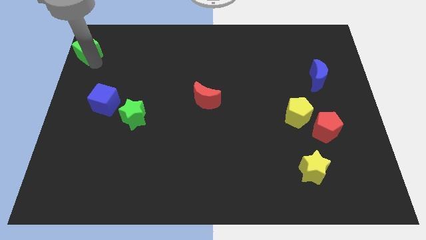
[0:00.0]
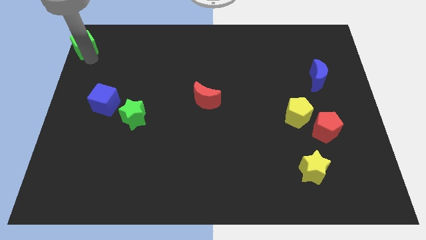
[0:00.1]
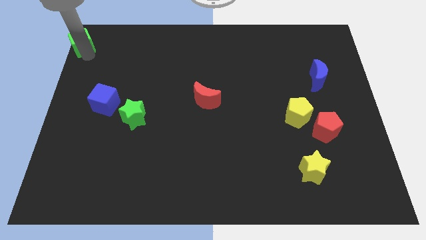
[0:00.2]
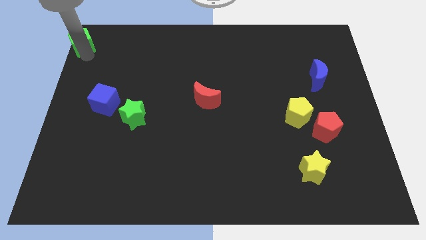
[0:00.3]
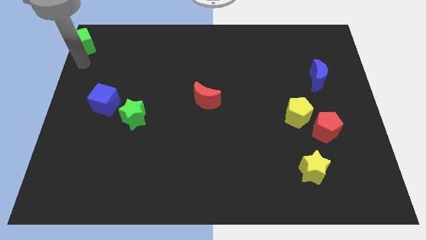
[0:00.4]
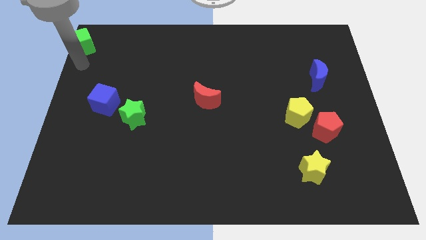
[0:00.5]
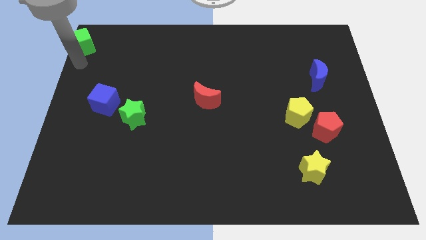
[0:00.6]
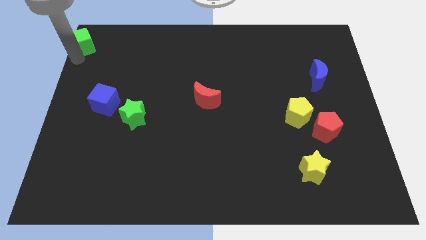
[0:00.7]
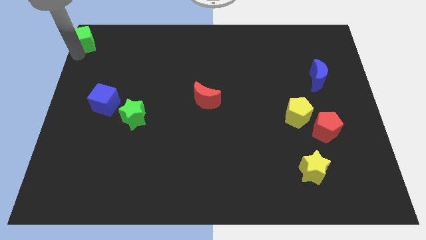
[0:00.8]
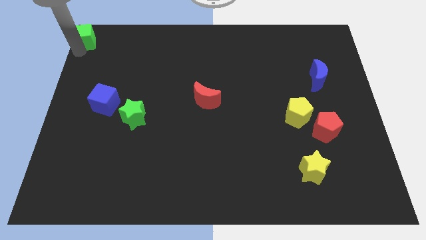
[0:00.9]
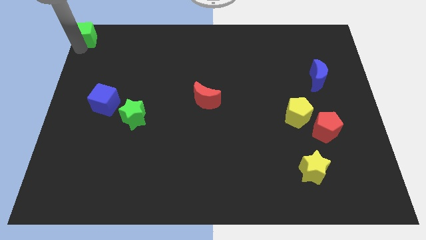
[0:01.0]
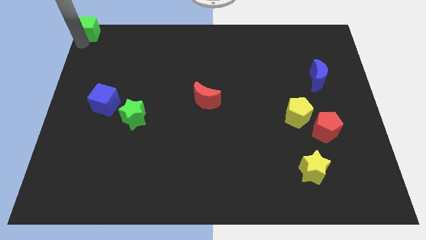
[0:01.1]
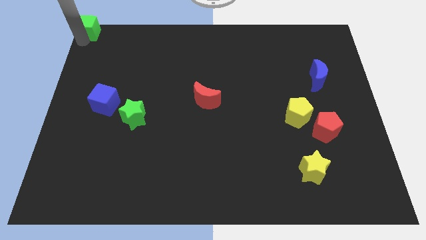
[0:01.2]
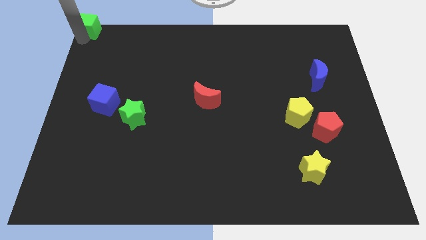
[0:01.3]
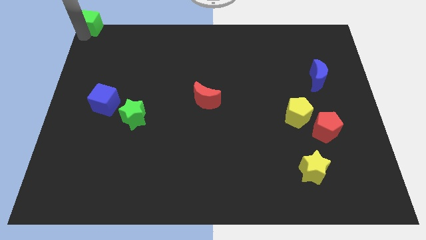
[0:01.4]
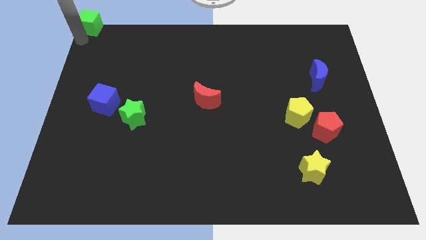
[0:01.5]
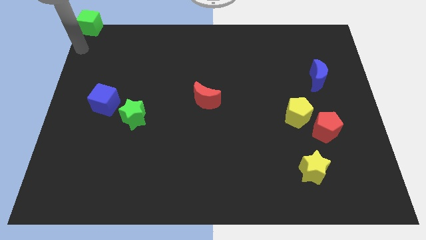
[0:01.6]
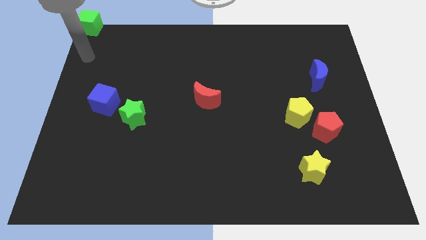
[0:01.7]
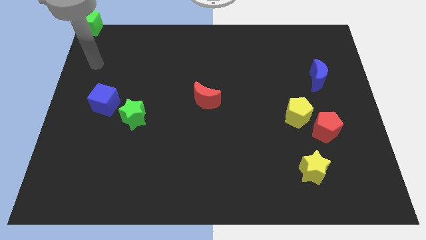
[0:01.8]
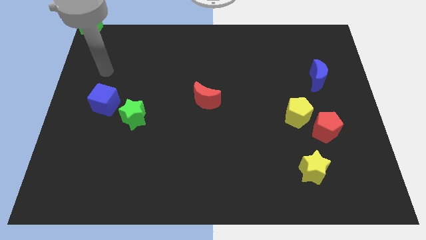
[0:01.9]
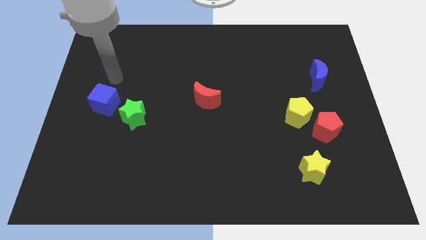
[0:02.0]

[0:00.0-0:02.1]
place the green cube to the top left corner

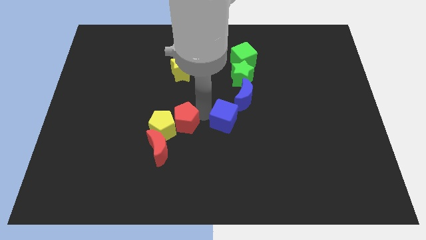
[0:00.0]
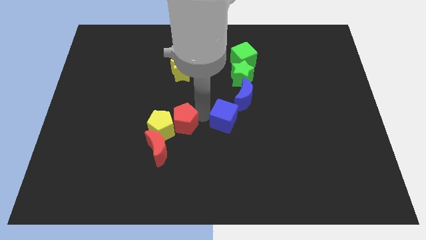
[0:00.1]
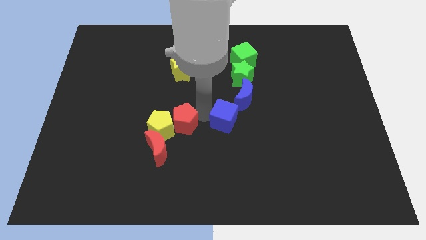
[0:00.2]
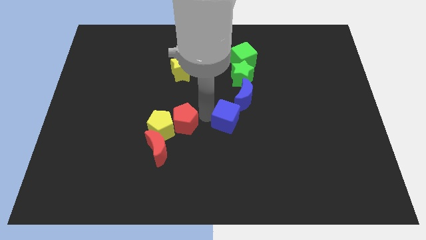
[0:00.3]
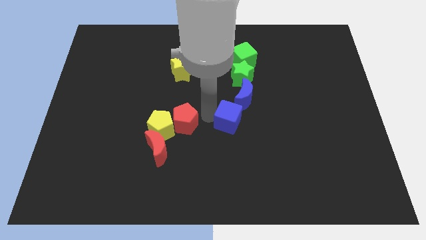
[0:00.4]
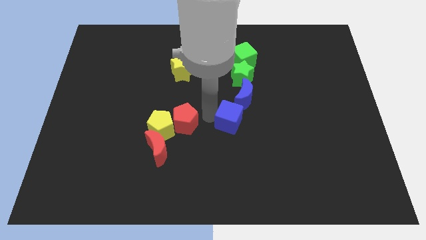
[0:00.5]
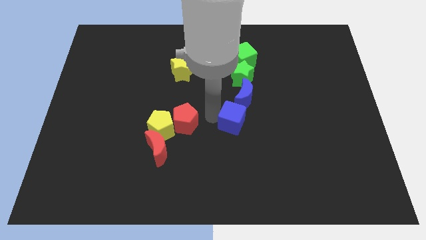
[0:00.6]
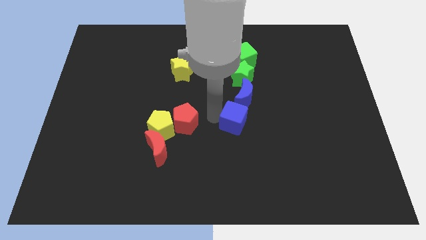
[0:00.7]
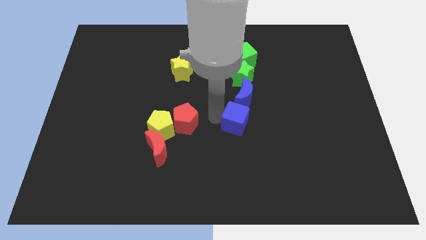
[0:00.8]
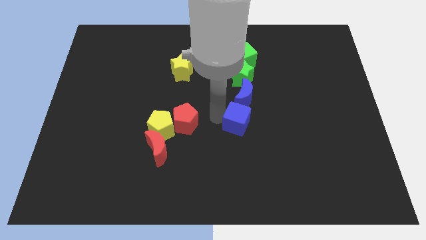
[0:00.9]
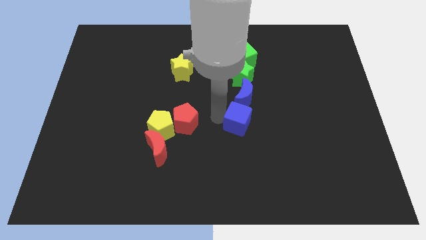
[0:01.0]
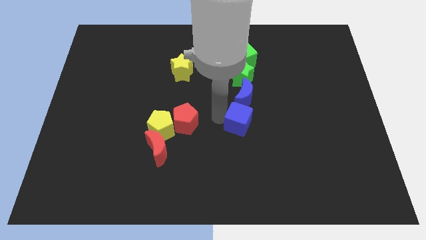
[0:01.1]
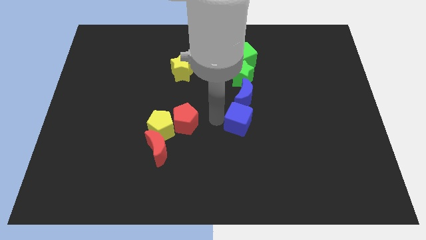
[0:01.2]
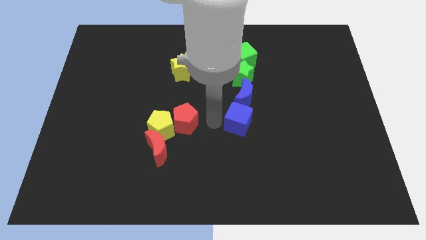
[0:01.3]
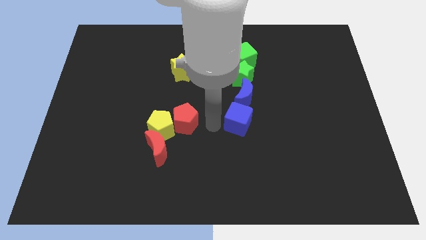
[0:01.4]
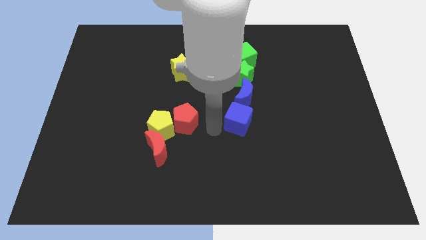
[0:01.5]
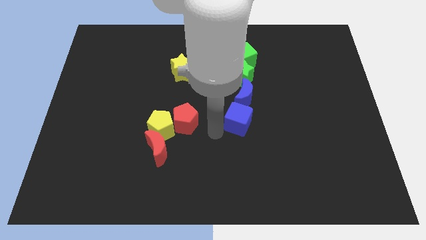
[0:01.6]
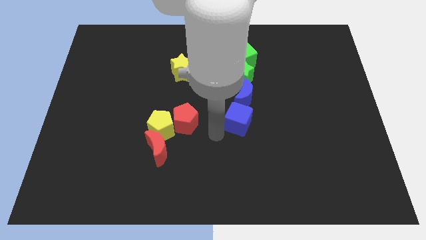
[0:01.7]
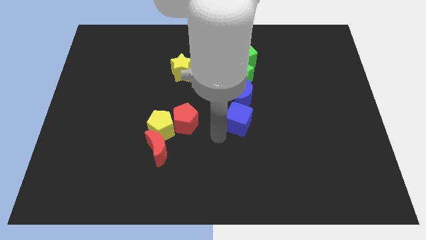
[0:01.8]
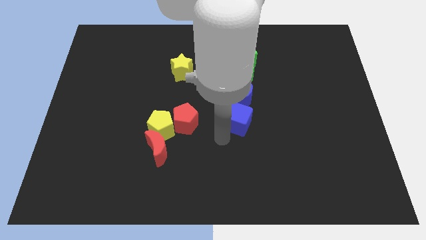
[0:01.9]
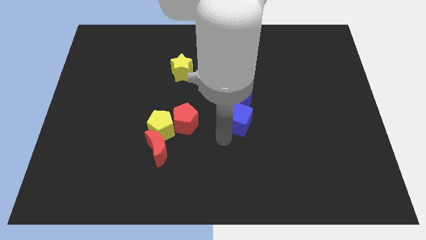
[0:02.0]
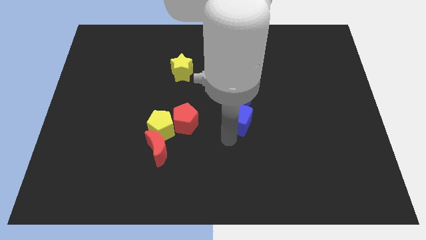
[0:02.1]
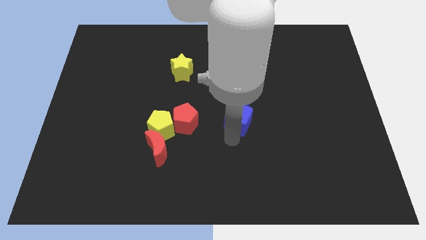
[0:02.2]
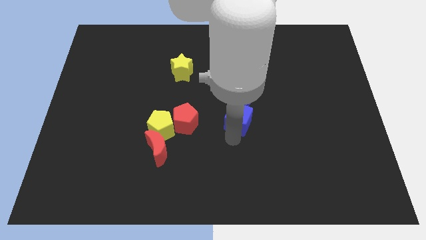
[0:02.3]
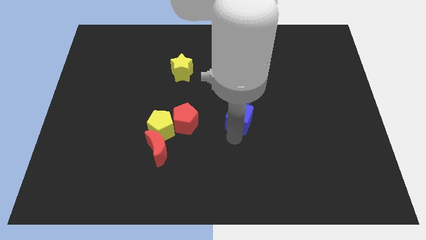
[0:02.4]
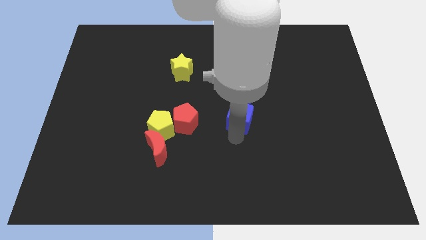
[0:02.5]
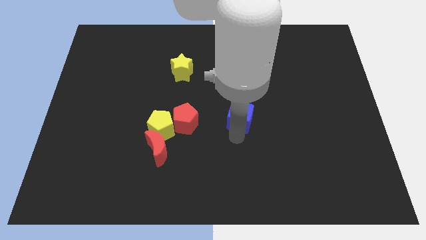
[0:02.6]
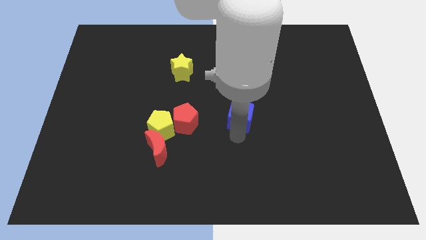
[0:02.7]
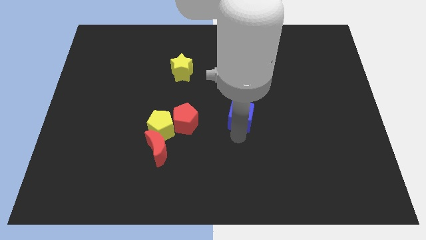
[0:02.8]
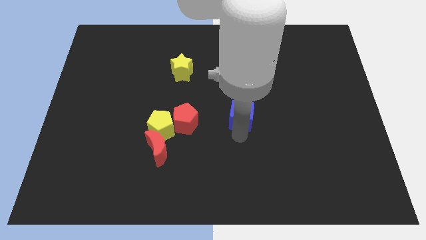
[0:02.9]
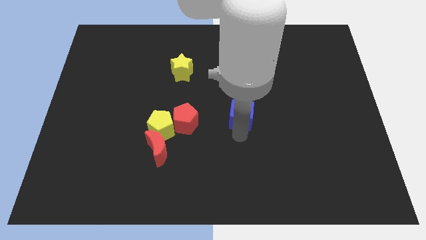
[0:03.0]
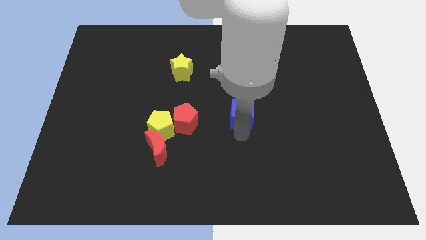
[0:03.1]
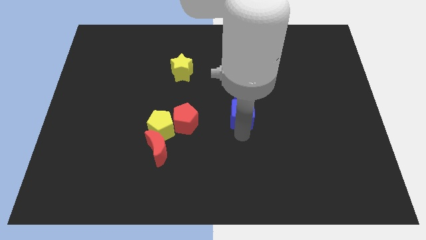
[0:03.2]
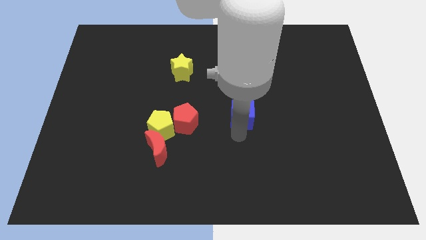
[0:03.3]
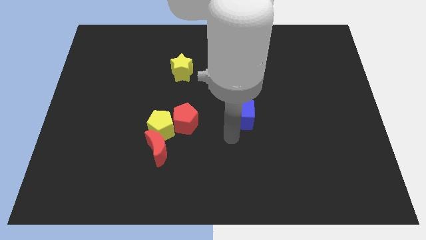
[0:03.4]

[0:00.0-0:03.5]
put the blue cube to the right of the red pentagon

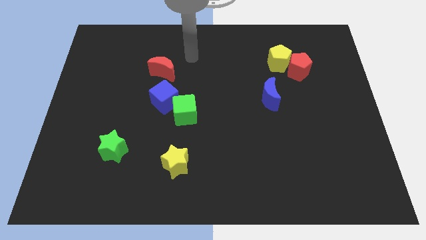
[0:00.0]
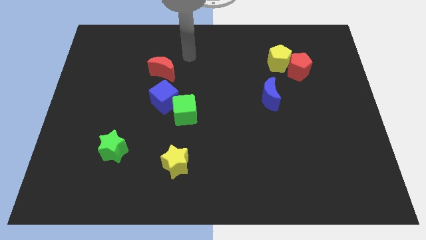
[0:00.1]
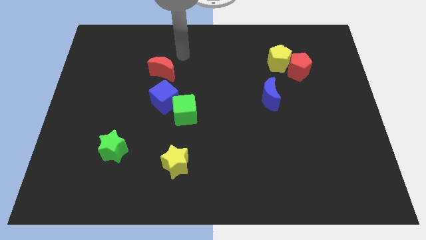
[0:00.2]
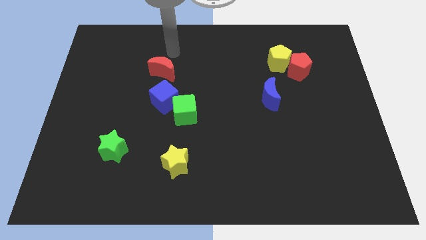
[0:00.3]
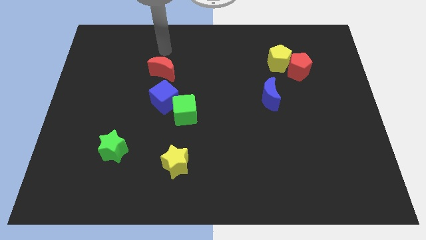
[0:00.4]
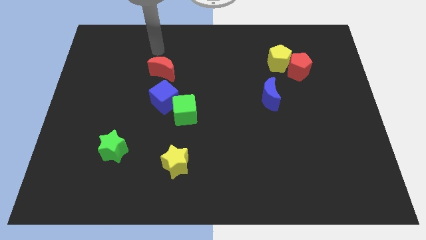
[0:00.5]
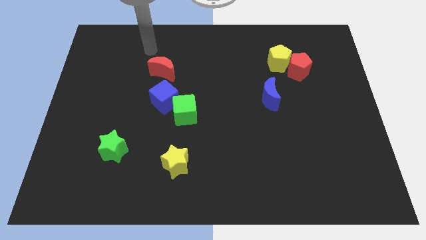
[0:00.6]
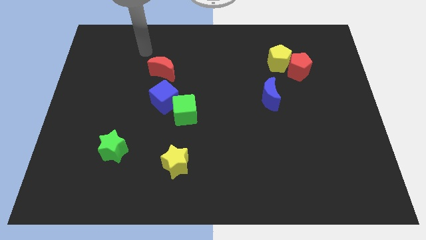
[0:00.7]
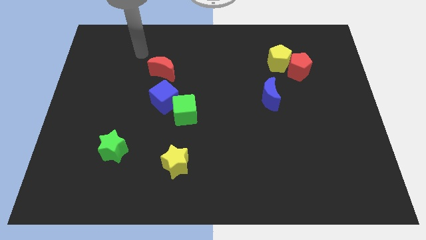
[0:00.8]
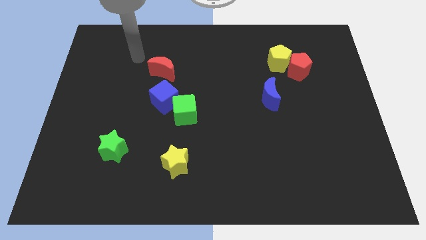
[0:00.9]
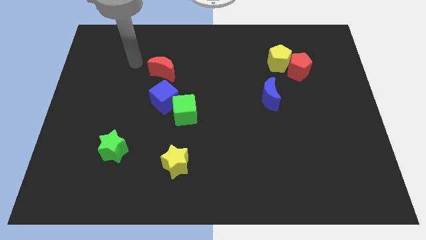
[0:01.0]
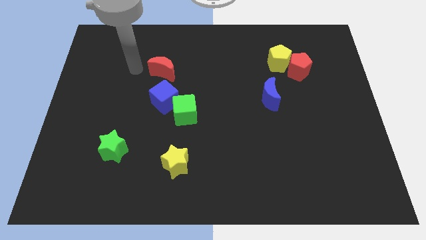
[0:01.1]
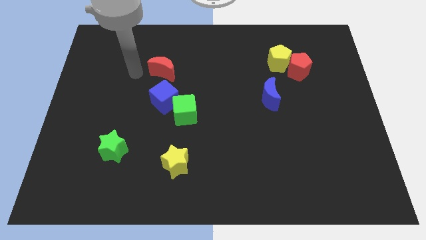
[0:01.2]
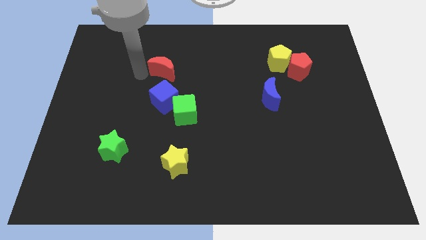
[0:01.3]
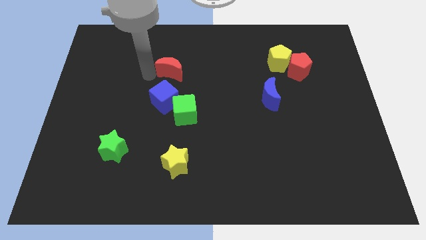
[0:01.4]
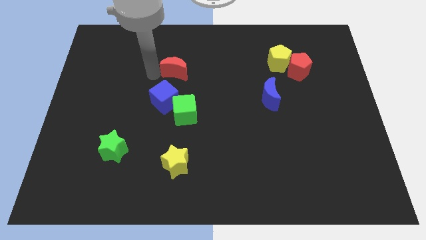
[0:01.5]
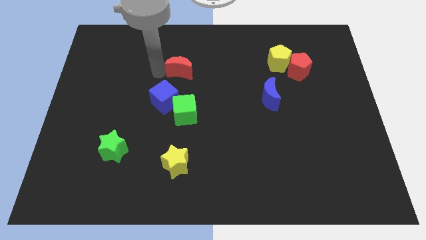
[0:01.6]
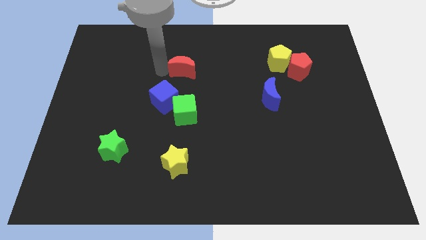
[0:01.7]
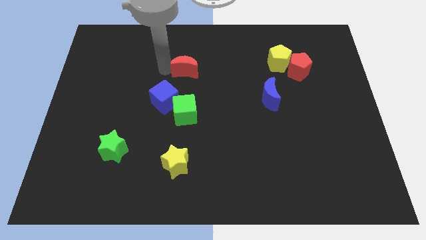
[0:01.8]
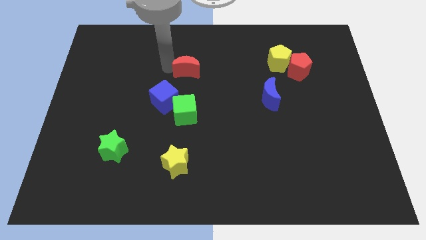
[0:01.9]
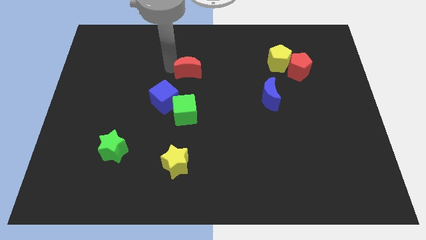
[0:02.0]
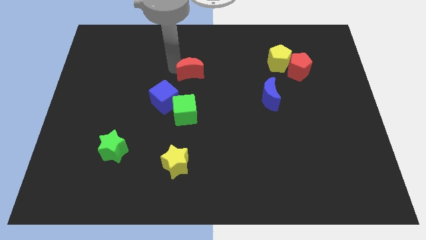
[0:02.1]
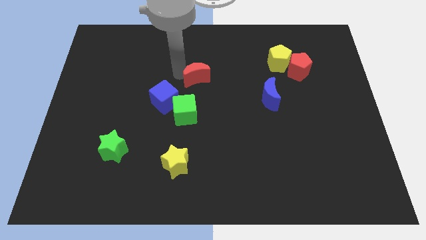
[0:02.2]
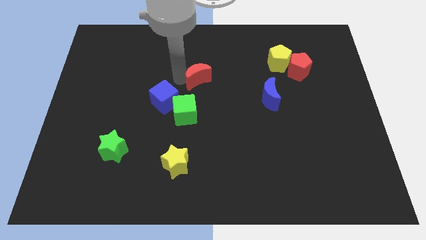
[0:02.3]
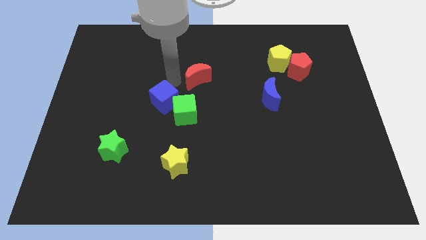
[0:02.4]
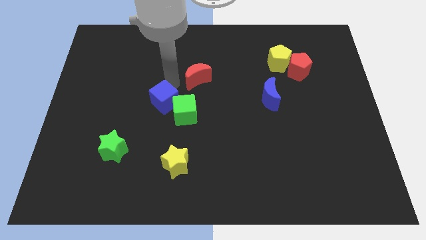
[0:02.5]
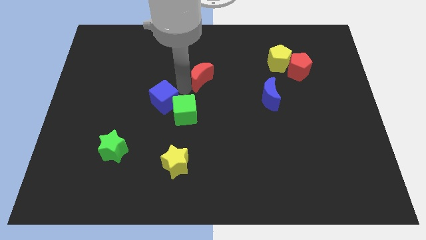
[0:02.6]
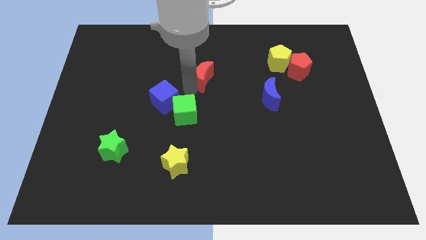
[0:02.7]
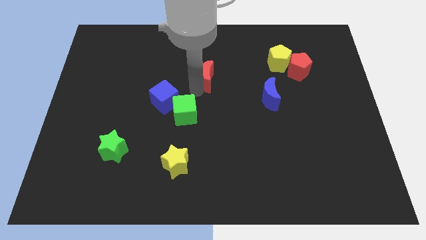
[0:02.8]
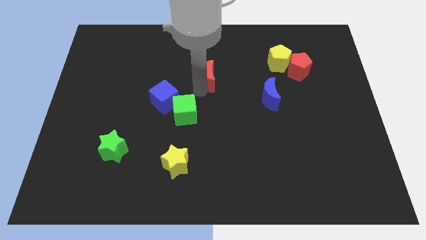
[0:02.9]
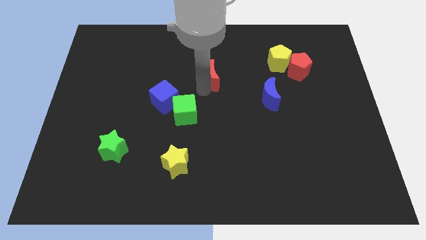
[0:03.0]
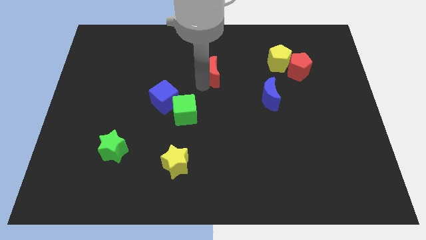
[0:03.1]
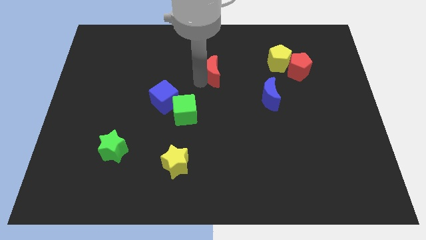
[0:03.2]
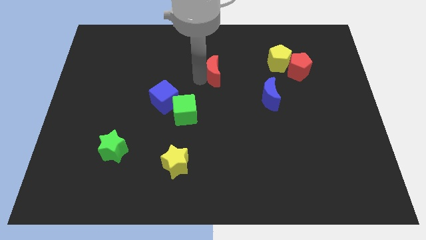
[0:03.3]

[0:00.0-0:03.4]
move the red crescent towards the yellow pentagon
